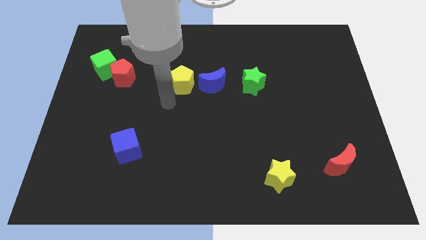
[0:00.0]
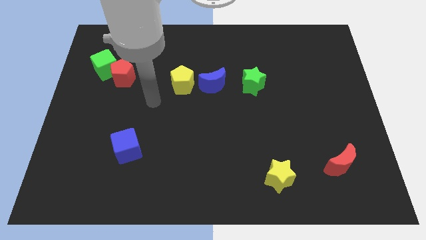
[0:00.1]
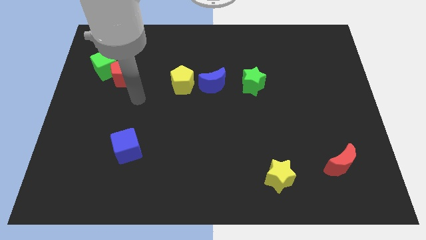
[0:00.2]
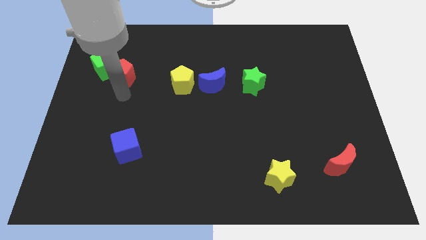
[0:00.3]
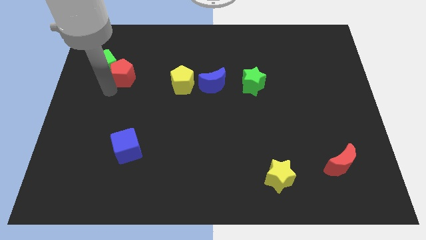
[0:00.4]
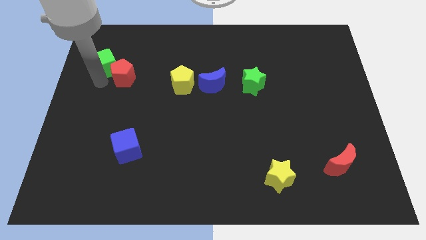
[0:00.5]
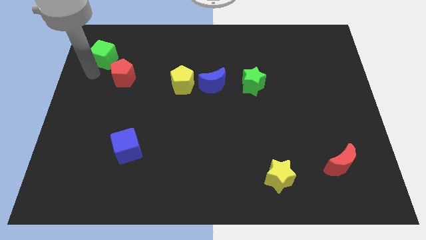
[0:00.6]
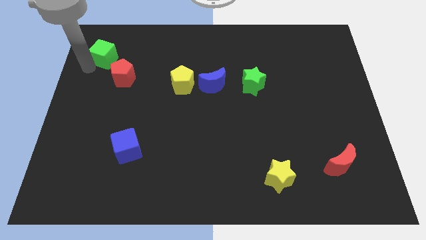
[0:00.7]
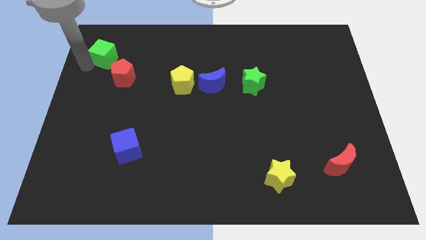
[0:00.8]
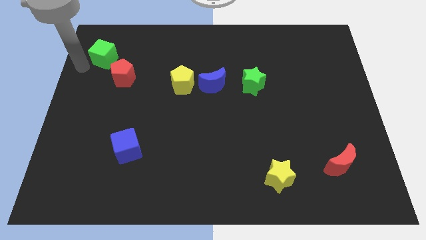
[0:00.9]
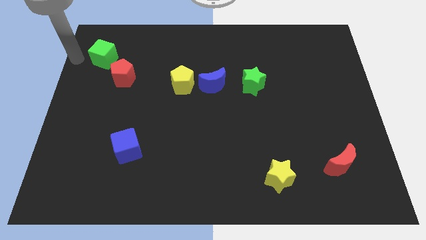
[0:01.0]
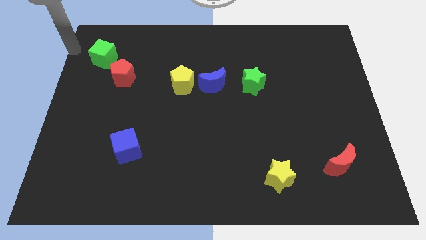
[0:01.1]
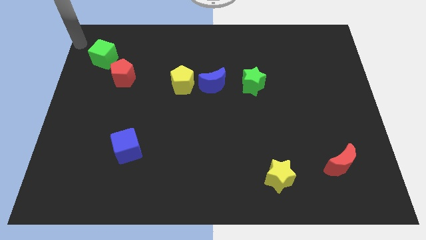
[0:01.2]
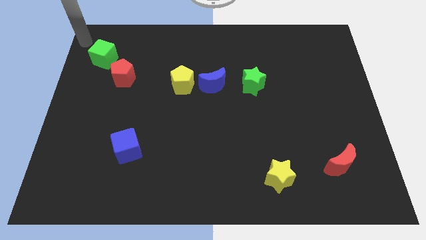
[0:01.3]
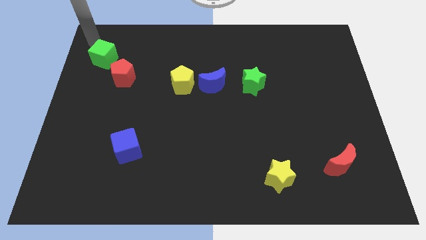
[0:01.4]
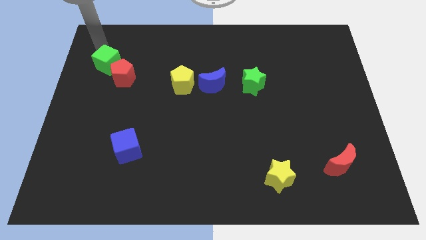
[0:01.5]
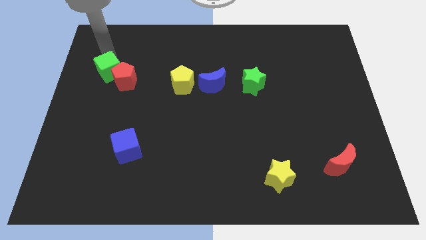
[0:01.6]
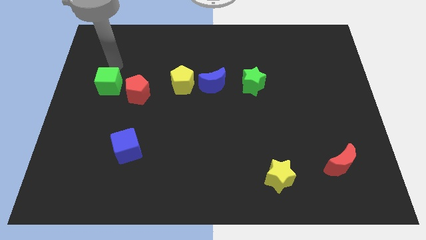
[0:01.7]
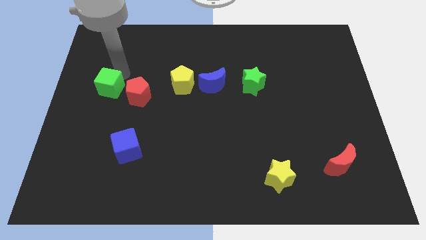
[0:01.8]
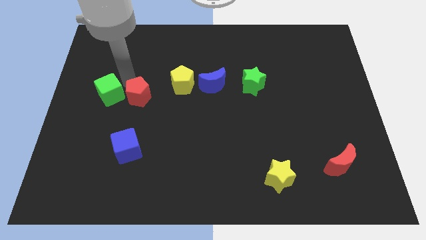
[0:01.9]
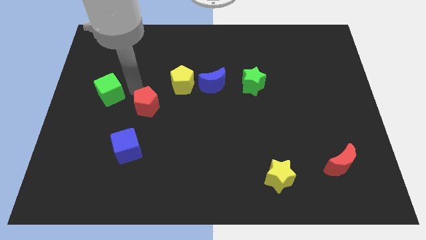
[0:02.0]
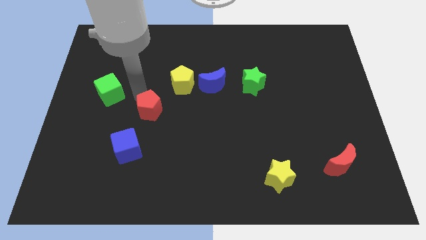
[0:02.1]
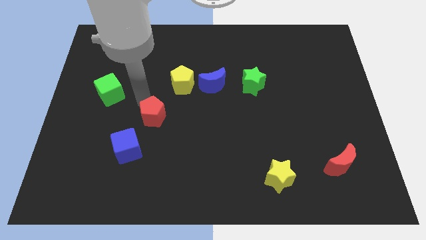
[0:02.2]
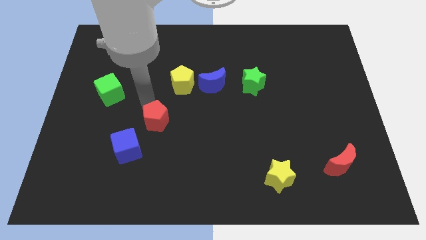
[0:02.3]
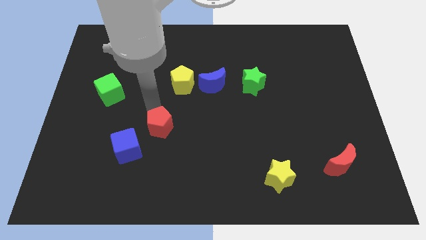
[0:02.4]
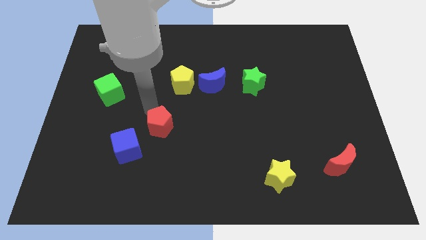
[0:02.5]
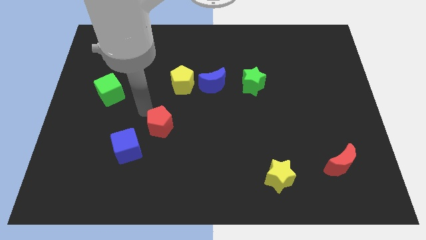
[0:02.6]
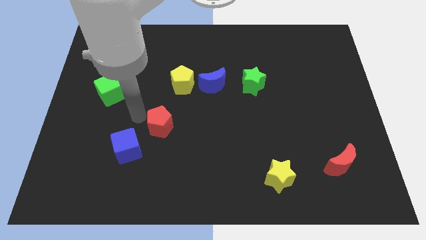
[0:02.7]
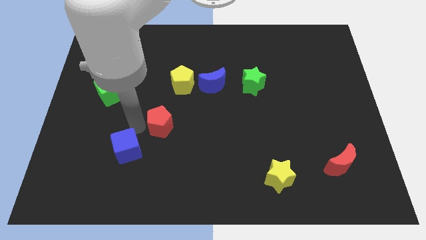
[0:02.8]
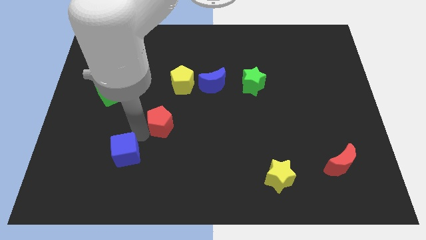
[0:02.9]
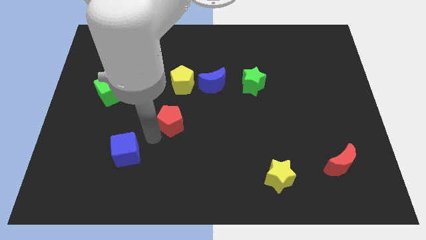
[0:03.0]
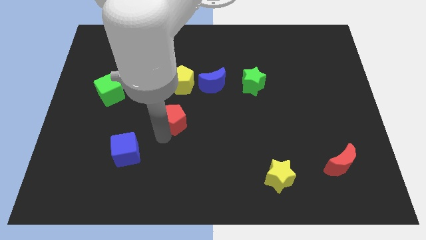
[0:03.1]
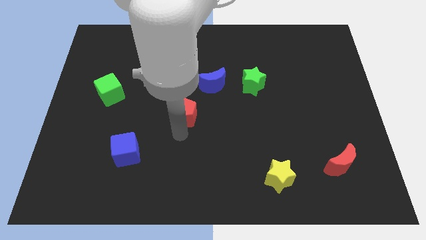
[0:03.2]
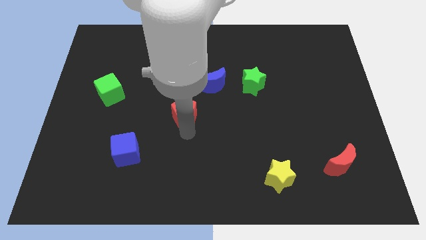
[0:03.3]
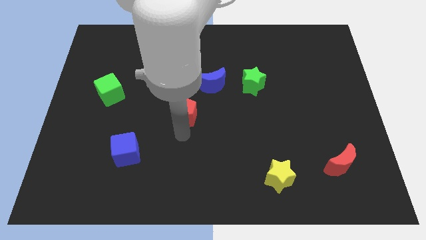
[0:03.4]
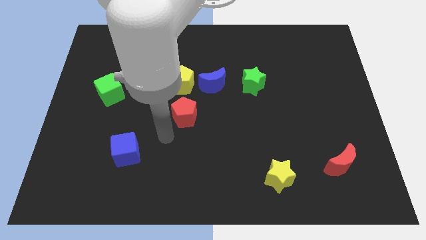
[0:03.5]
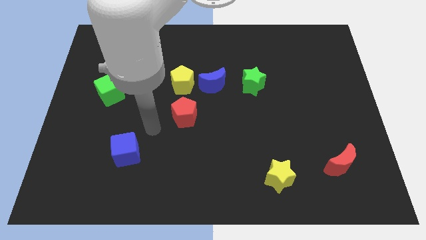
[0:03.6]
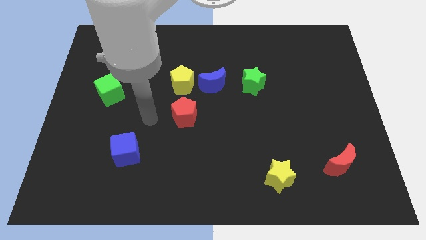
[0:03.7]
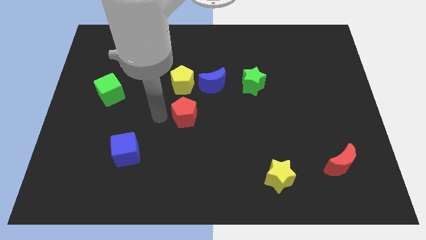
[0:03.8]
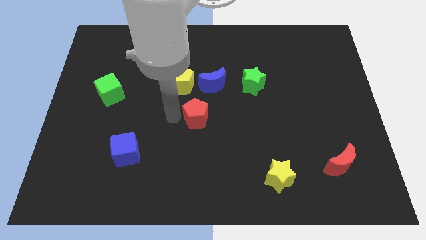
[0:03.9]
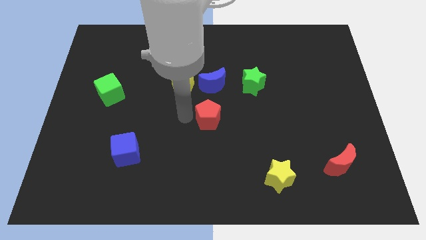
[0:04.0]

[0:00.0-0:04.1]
push the red pentagon vertically below the bottom side of the blue cube

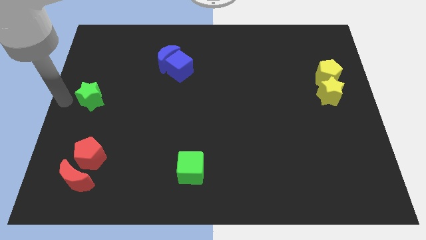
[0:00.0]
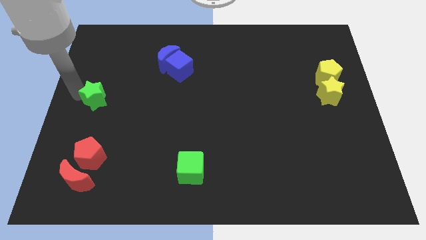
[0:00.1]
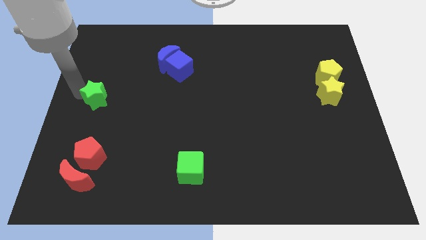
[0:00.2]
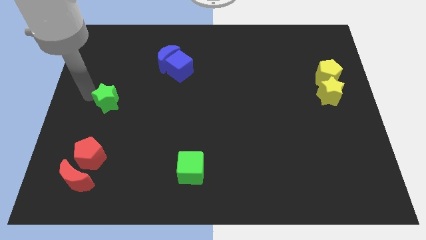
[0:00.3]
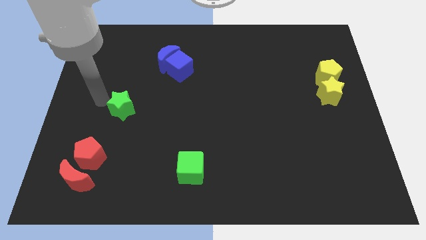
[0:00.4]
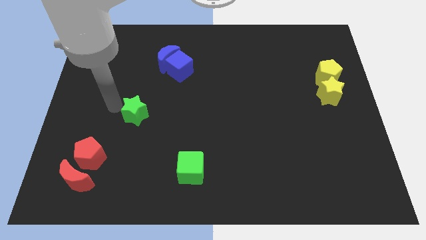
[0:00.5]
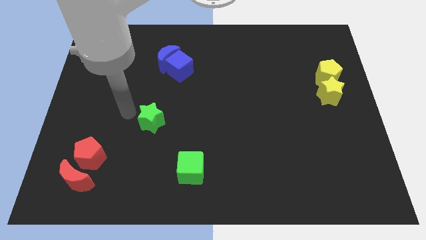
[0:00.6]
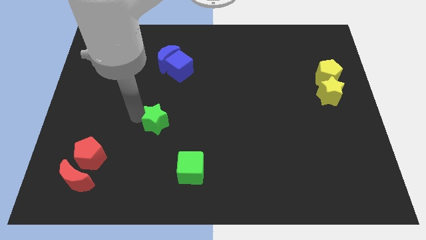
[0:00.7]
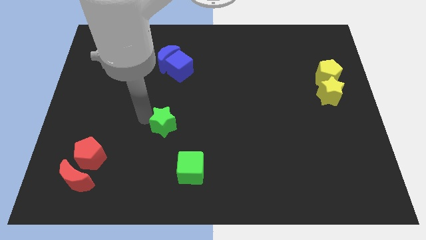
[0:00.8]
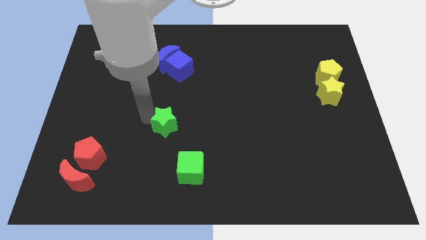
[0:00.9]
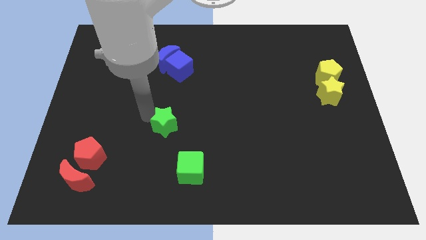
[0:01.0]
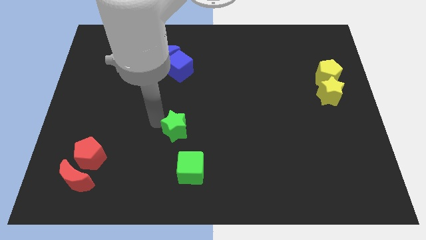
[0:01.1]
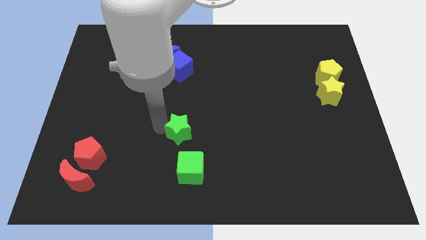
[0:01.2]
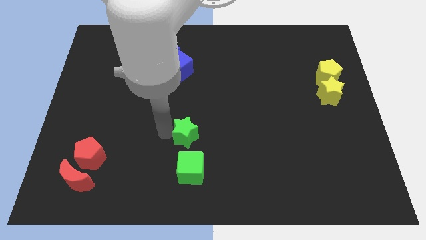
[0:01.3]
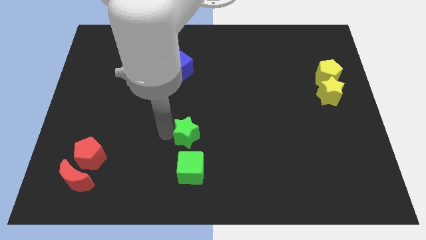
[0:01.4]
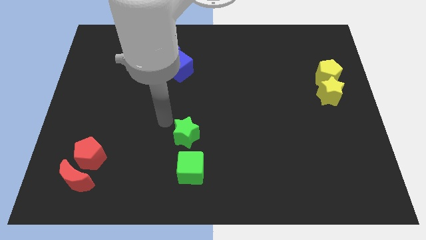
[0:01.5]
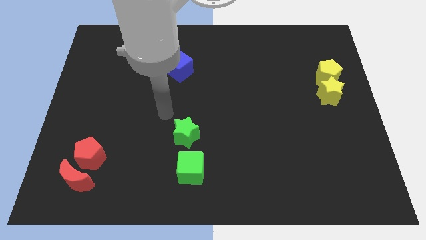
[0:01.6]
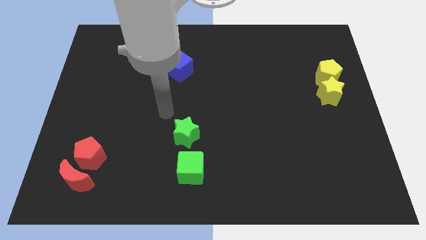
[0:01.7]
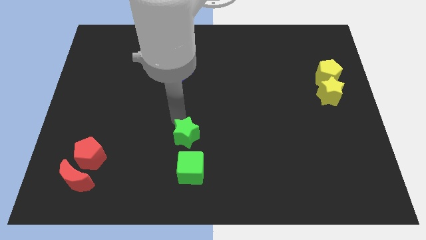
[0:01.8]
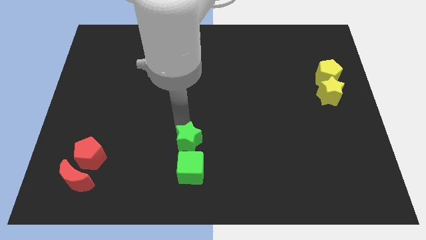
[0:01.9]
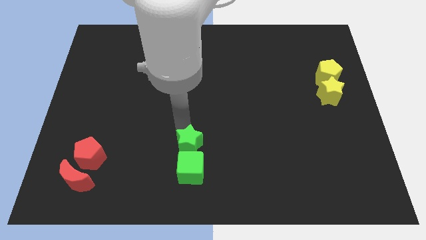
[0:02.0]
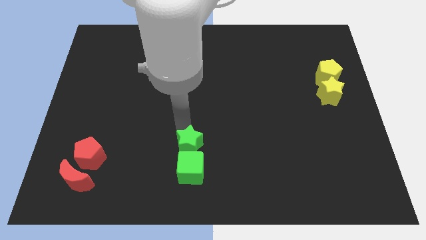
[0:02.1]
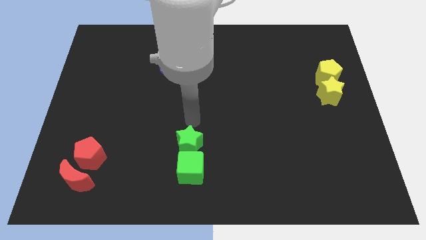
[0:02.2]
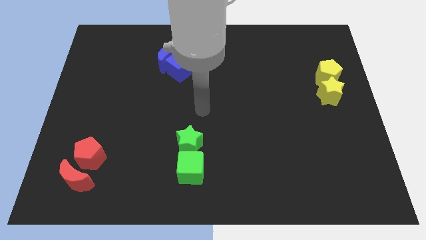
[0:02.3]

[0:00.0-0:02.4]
push the green star towards the top of green cube

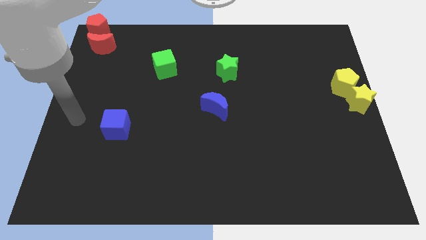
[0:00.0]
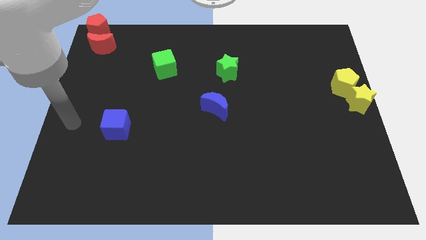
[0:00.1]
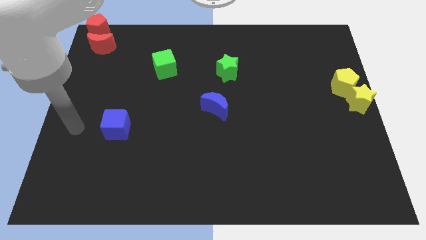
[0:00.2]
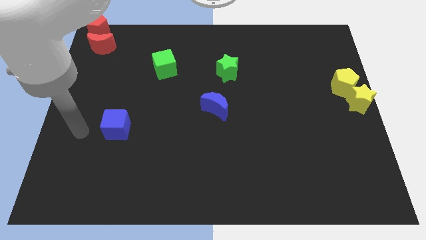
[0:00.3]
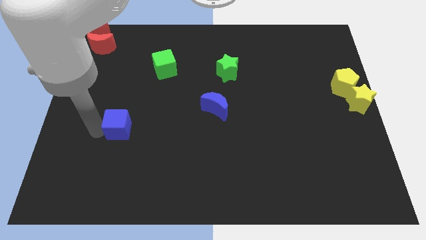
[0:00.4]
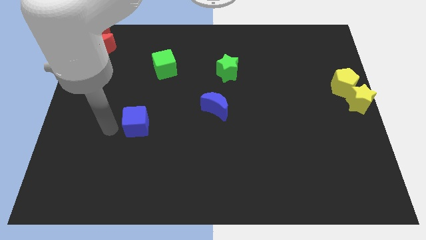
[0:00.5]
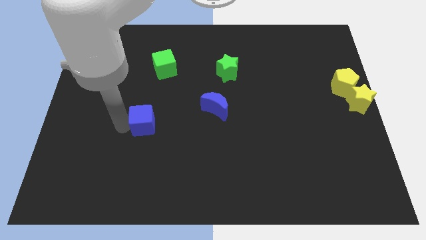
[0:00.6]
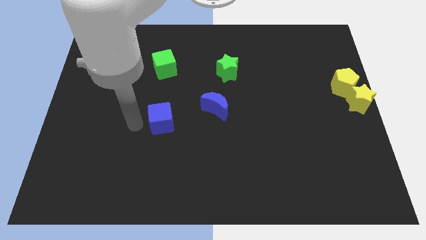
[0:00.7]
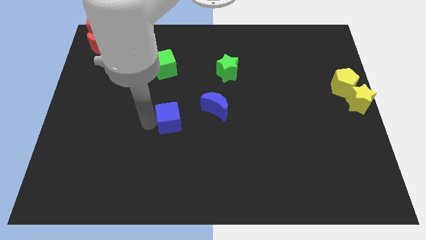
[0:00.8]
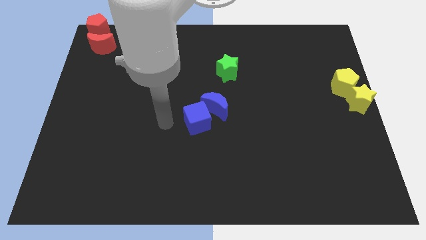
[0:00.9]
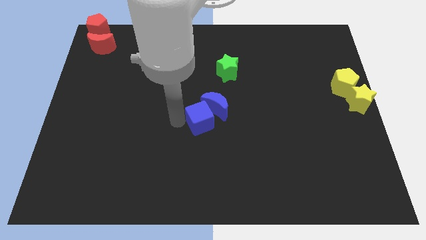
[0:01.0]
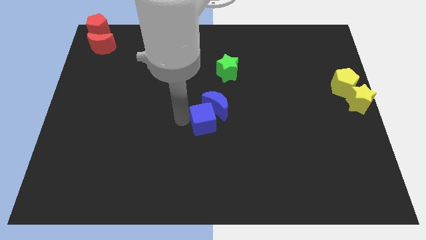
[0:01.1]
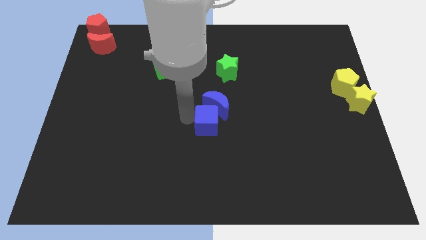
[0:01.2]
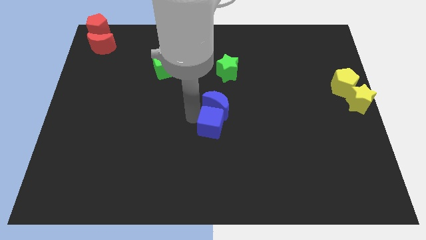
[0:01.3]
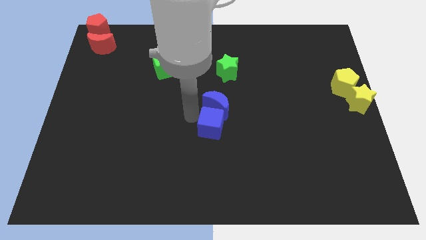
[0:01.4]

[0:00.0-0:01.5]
move the blue cube into the blue moon

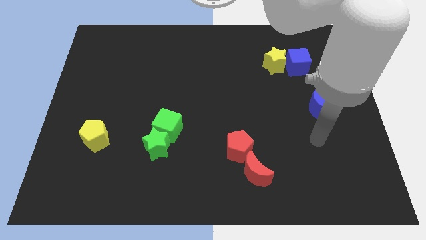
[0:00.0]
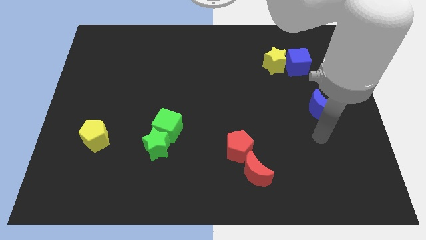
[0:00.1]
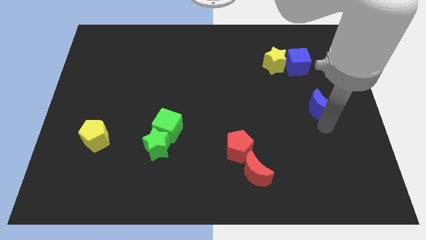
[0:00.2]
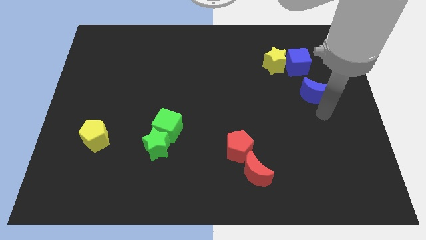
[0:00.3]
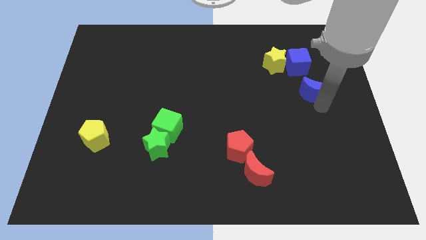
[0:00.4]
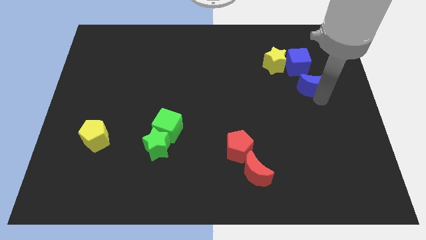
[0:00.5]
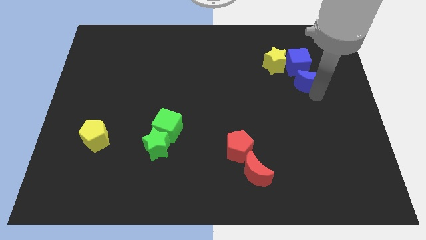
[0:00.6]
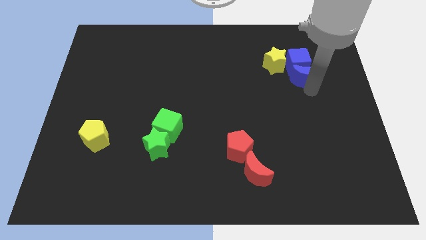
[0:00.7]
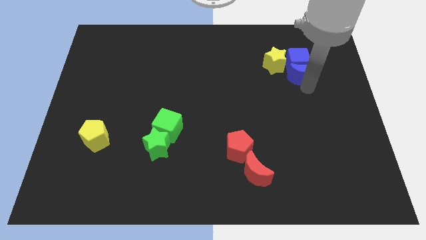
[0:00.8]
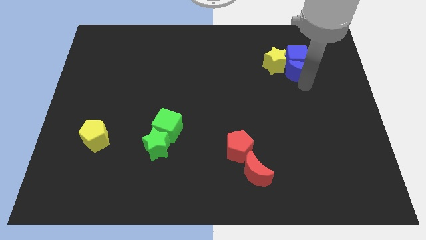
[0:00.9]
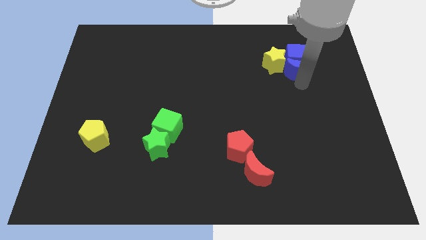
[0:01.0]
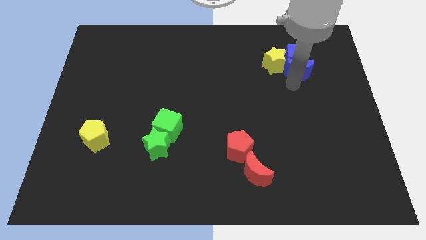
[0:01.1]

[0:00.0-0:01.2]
push the blue moon into the blue cube
